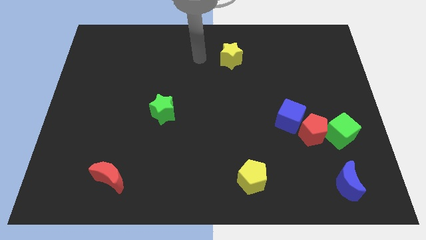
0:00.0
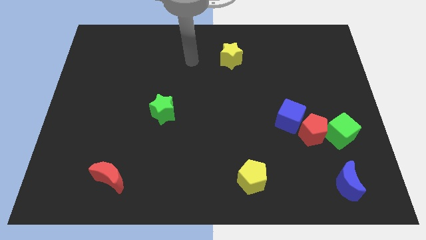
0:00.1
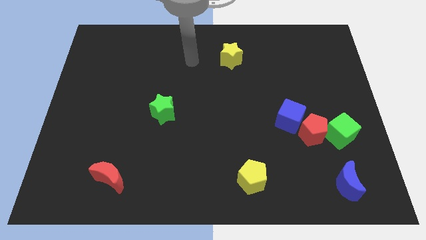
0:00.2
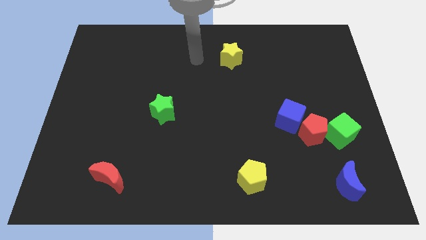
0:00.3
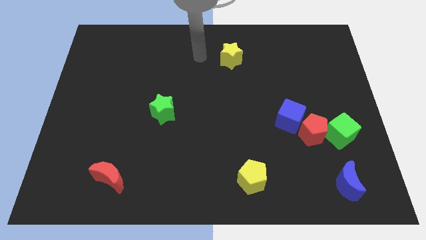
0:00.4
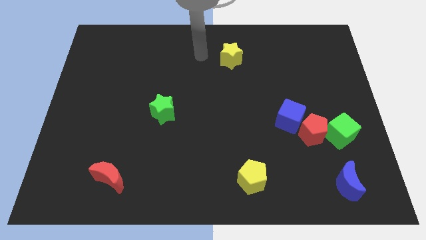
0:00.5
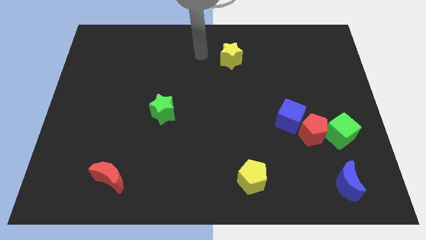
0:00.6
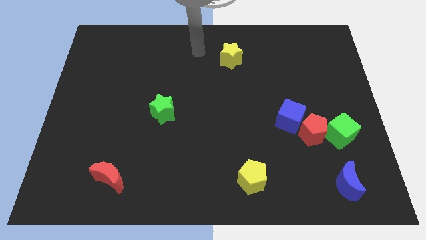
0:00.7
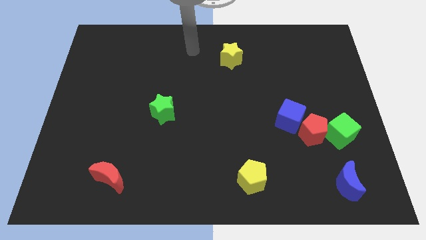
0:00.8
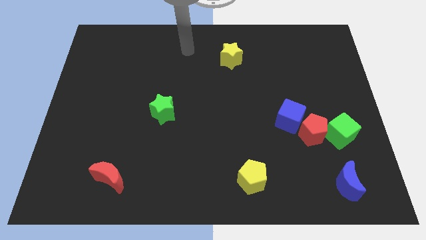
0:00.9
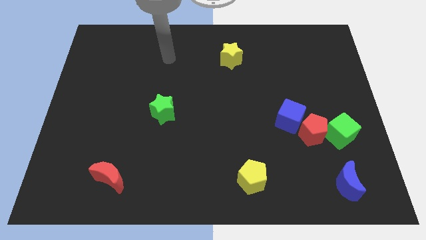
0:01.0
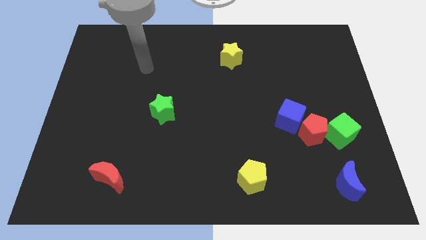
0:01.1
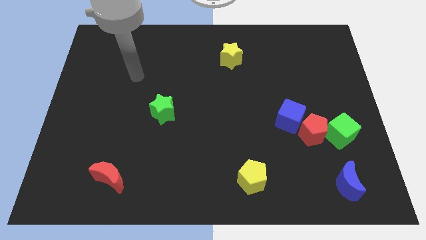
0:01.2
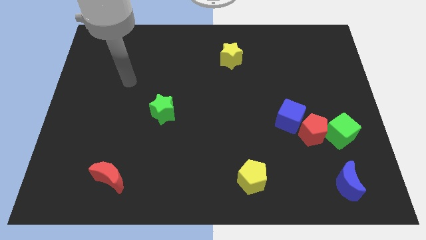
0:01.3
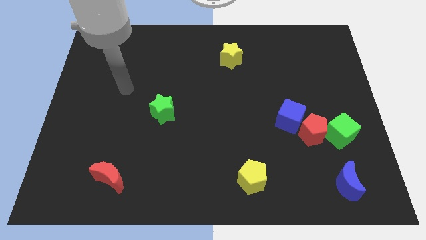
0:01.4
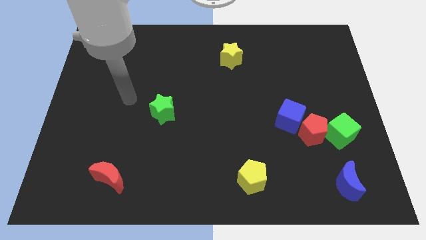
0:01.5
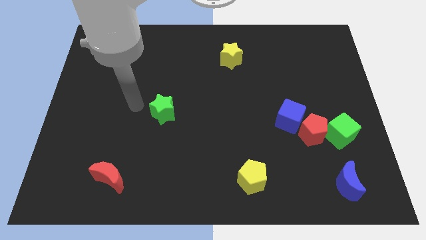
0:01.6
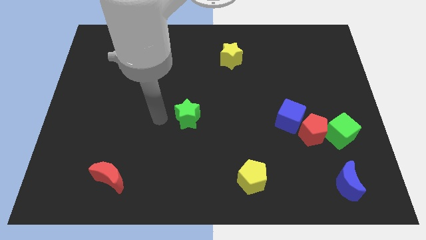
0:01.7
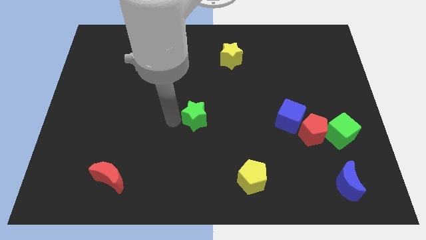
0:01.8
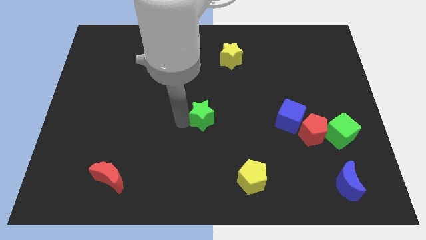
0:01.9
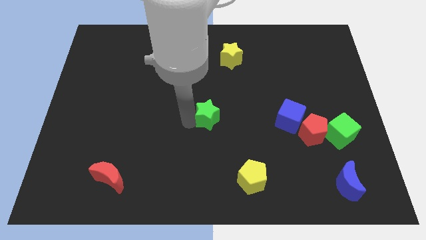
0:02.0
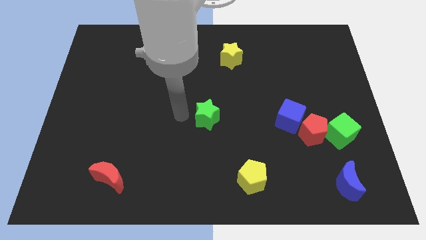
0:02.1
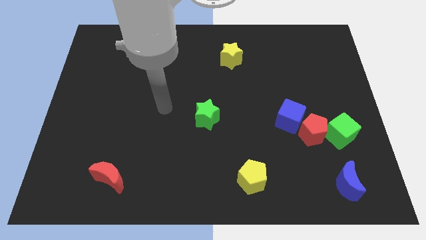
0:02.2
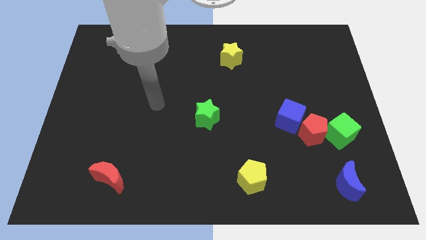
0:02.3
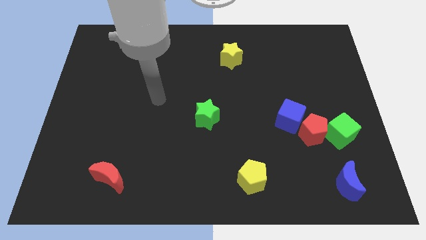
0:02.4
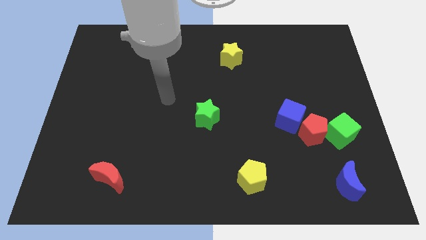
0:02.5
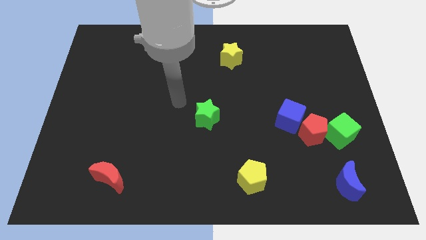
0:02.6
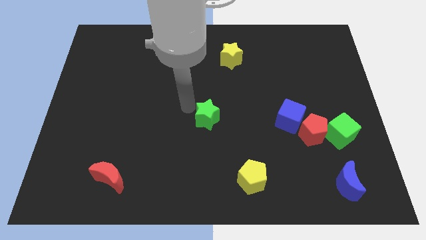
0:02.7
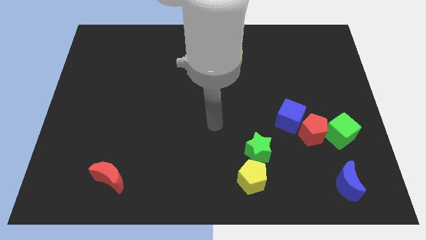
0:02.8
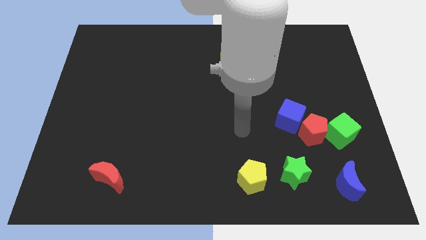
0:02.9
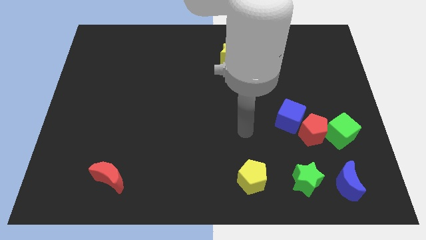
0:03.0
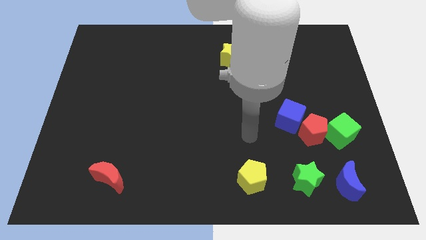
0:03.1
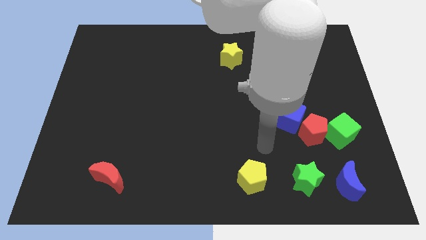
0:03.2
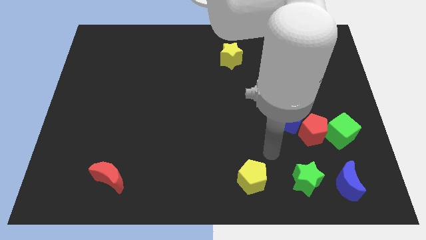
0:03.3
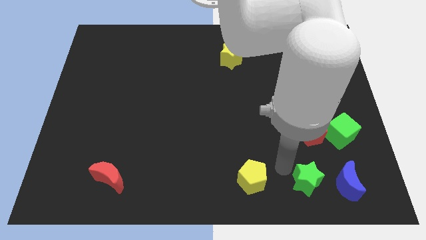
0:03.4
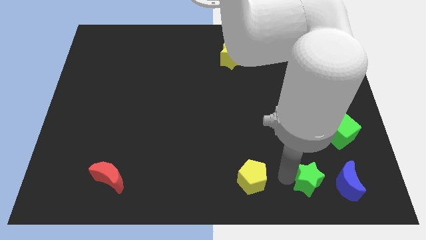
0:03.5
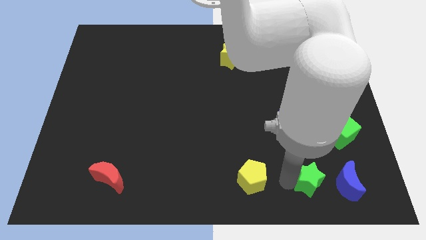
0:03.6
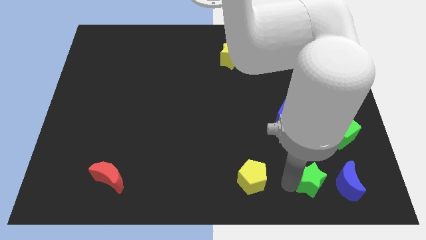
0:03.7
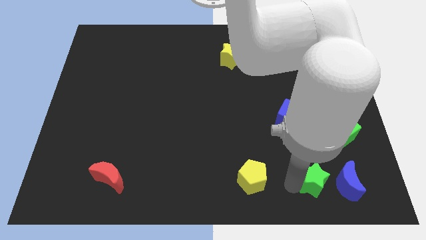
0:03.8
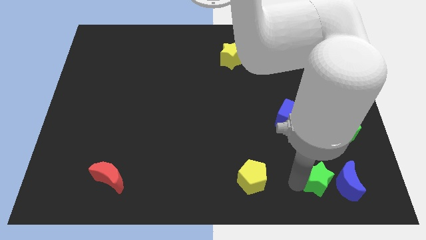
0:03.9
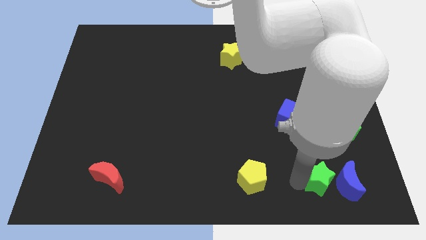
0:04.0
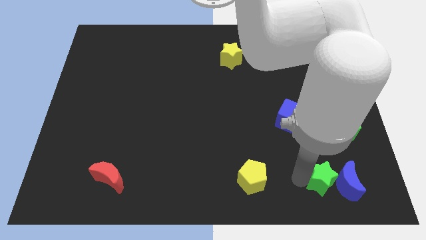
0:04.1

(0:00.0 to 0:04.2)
push the green star close to the blue moon

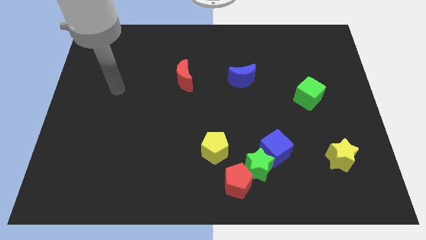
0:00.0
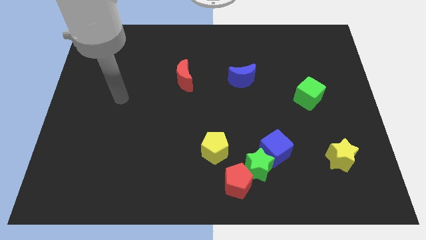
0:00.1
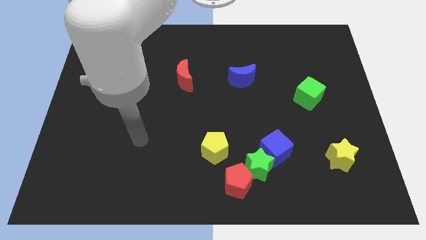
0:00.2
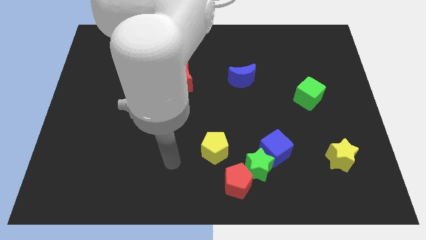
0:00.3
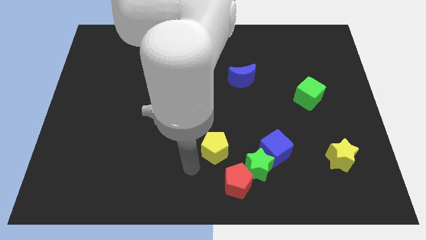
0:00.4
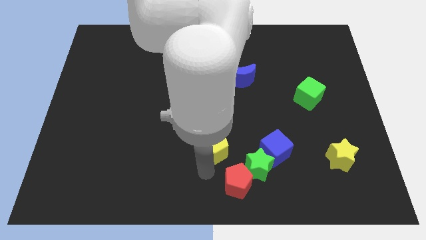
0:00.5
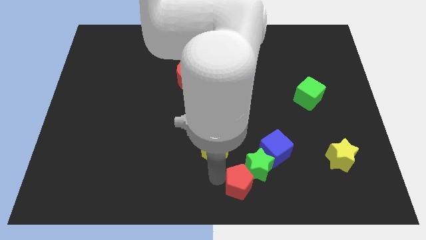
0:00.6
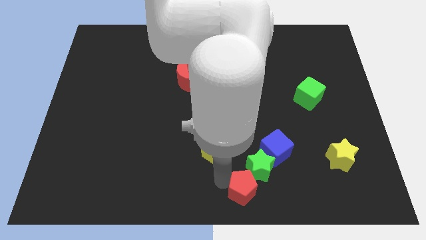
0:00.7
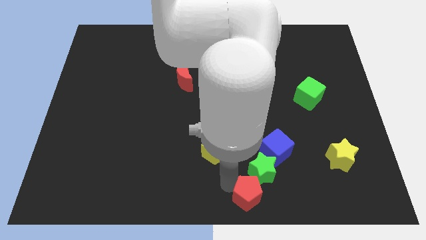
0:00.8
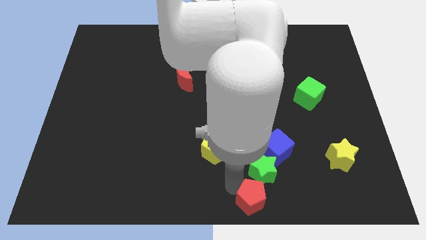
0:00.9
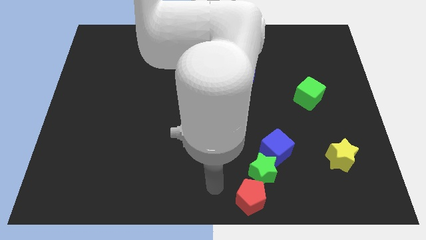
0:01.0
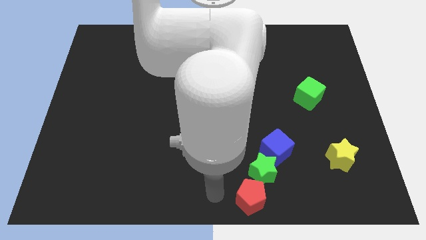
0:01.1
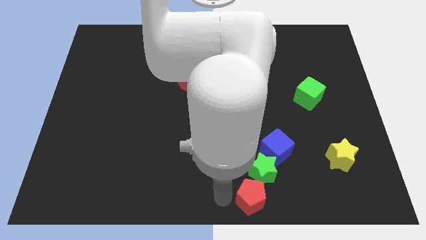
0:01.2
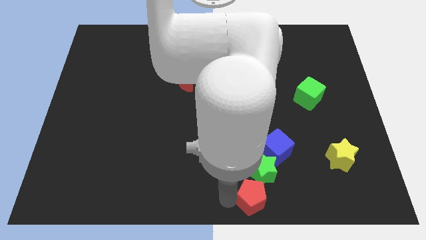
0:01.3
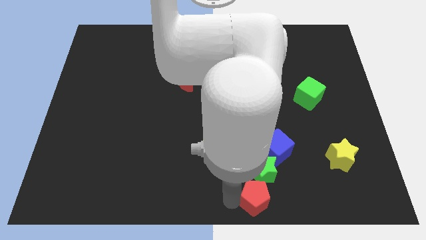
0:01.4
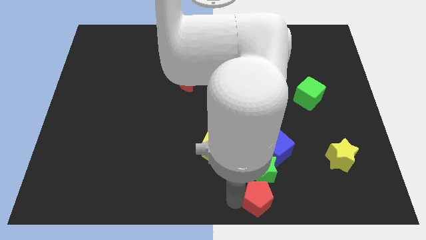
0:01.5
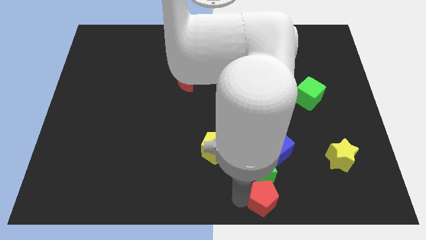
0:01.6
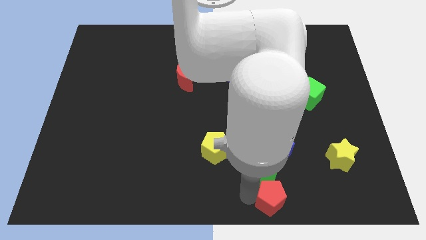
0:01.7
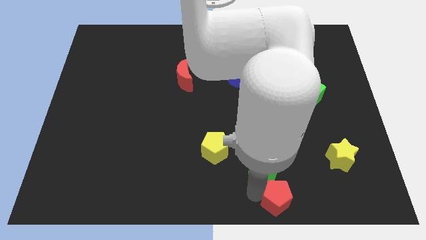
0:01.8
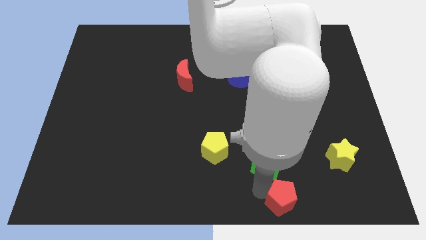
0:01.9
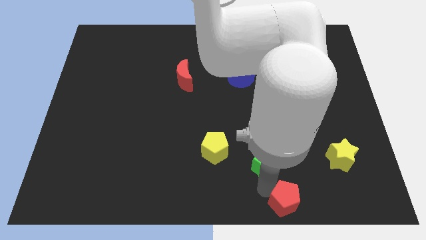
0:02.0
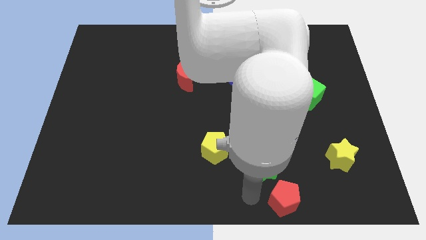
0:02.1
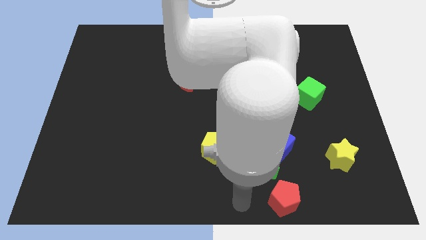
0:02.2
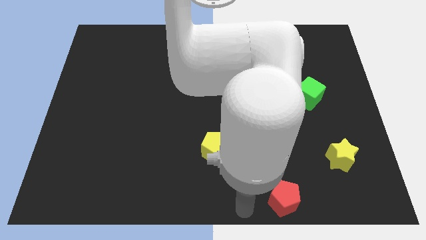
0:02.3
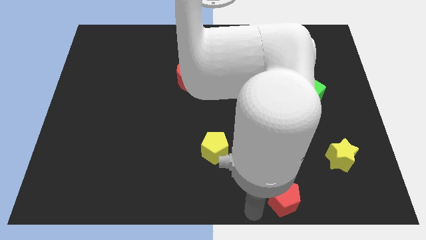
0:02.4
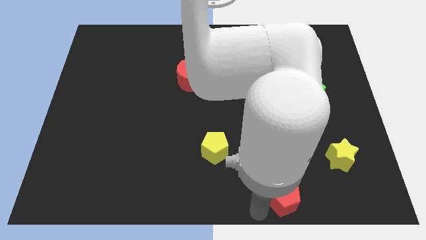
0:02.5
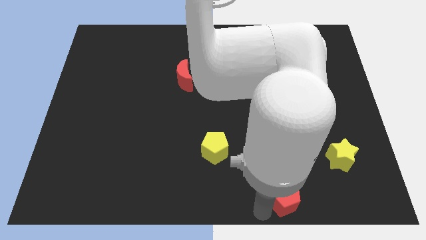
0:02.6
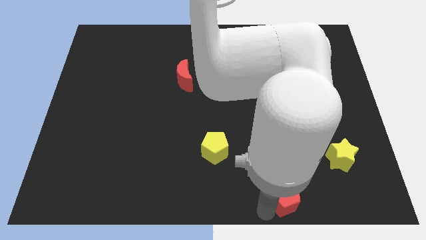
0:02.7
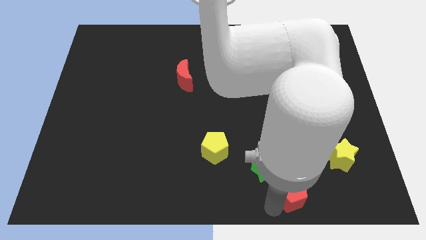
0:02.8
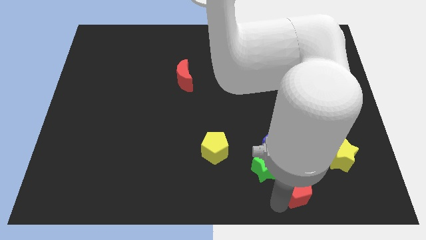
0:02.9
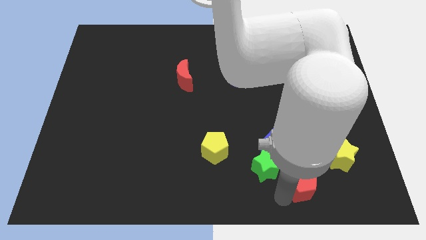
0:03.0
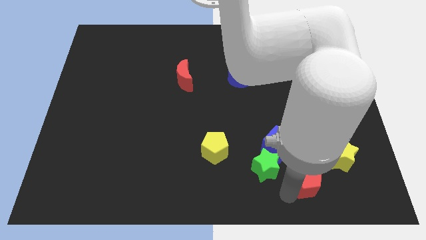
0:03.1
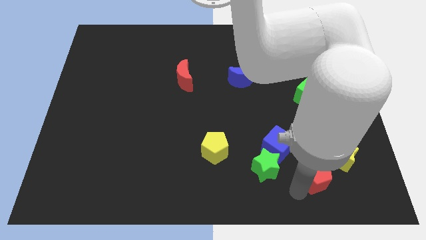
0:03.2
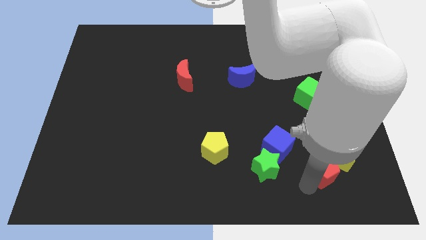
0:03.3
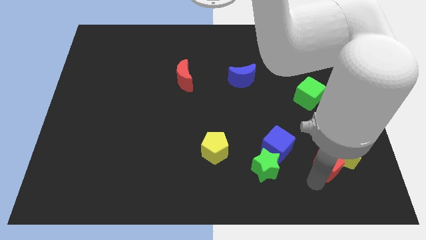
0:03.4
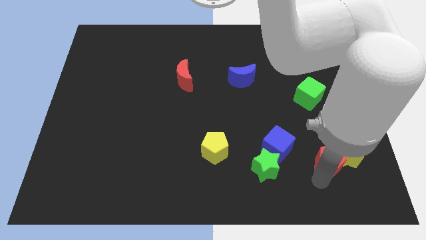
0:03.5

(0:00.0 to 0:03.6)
slide the red pentagon to the yellow star

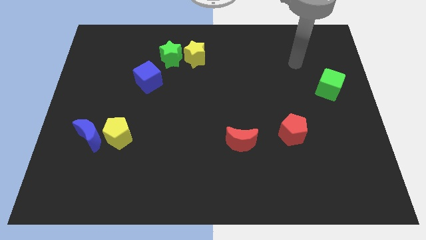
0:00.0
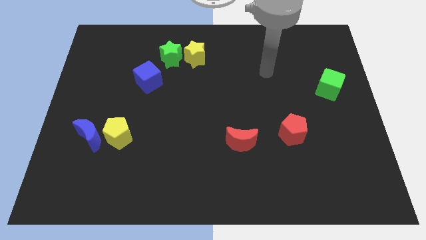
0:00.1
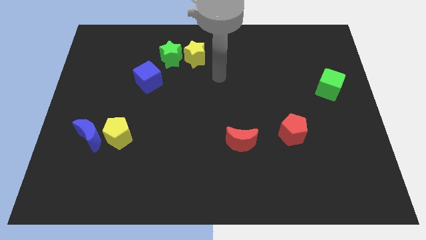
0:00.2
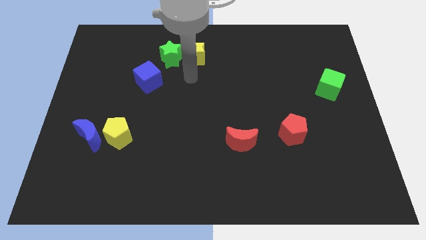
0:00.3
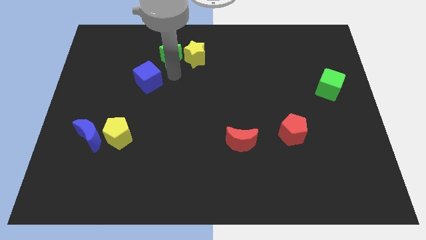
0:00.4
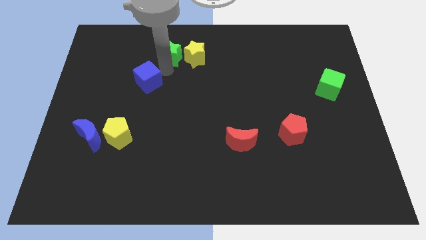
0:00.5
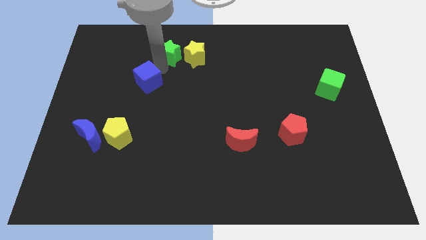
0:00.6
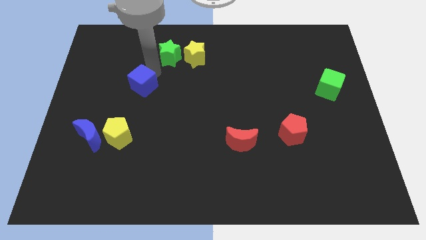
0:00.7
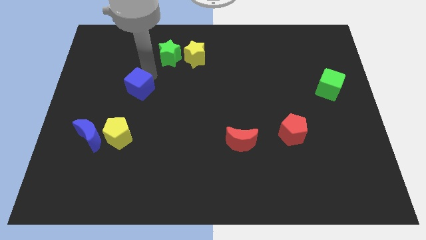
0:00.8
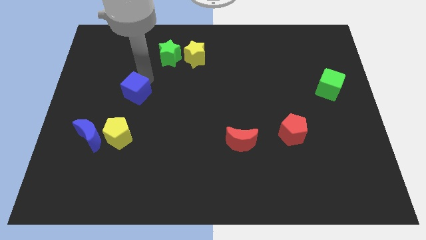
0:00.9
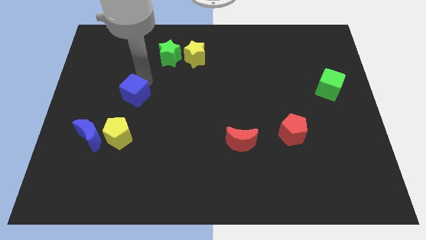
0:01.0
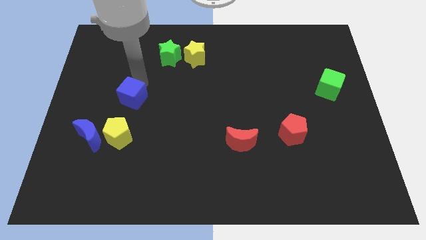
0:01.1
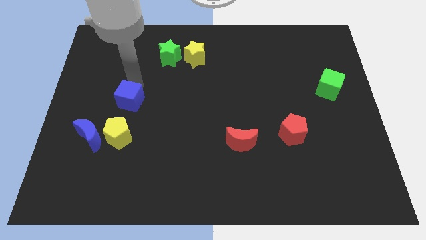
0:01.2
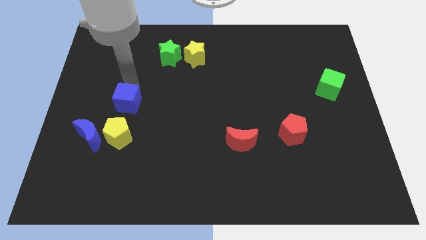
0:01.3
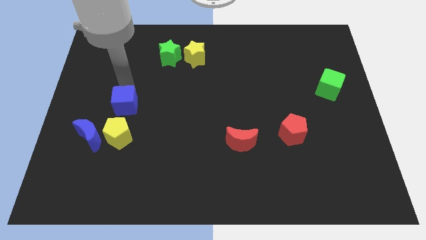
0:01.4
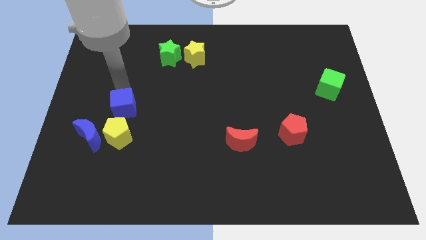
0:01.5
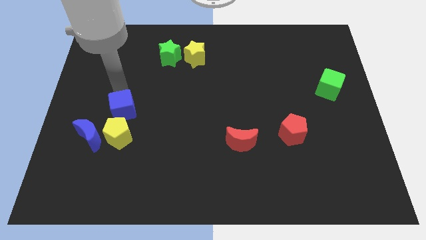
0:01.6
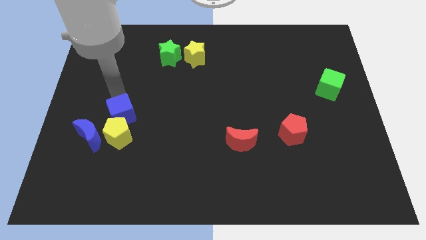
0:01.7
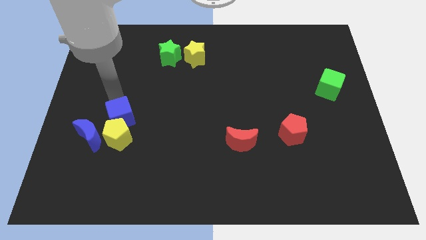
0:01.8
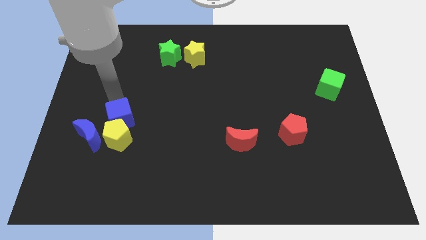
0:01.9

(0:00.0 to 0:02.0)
slide the blue cube towards the yellow pentagon
